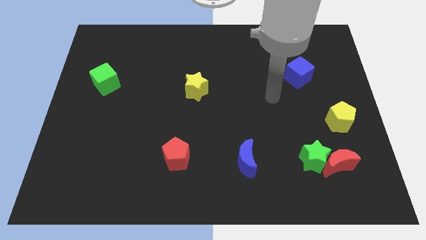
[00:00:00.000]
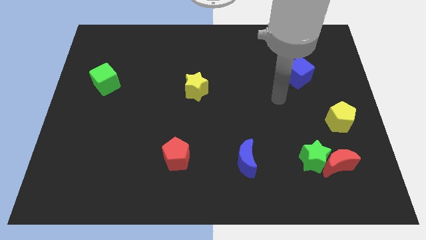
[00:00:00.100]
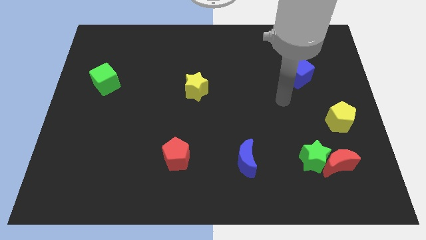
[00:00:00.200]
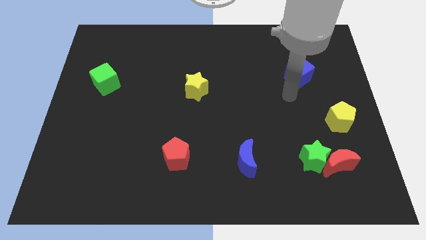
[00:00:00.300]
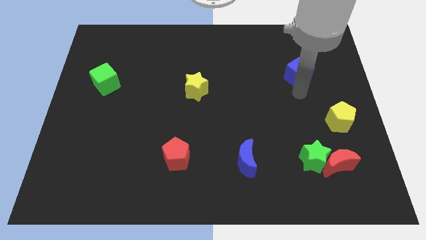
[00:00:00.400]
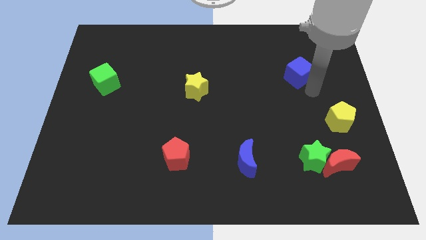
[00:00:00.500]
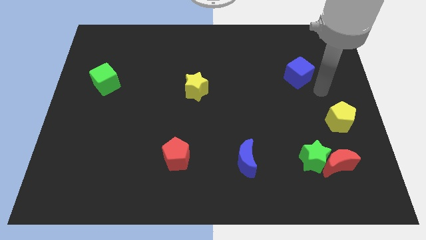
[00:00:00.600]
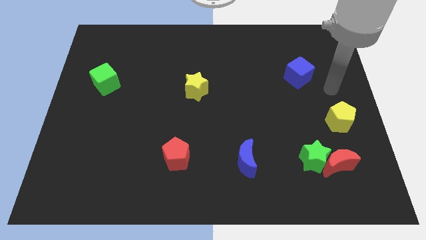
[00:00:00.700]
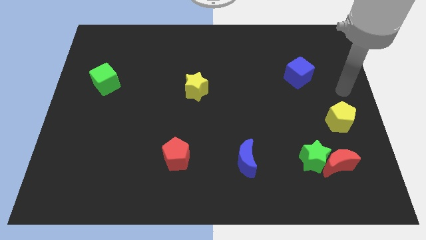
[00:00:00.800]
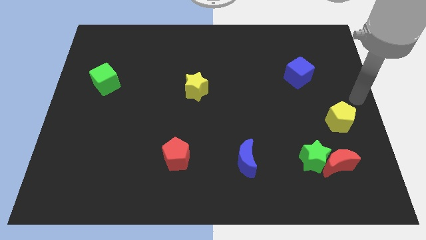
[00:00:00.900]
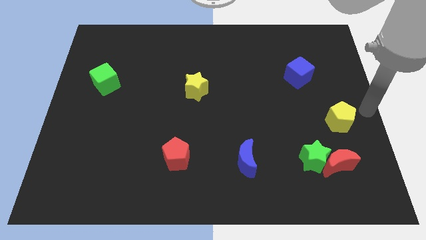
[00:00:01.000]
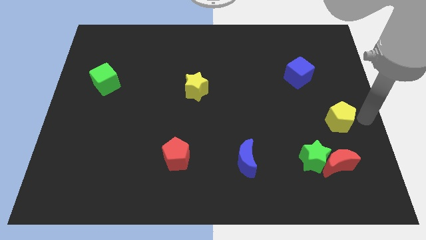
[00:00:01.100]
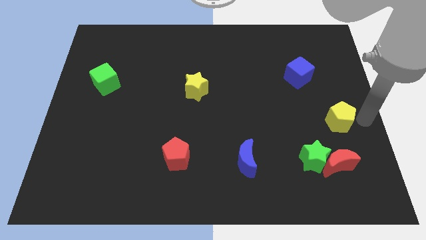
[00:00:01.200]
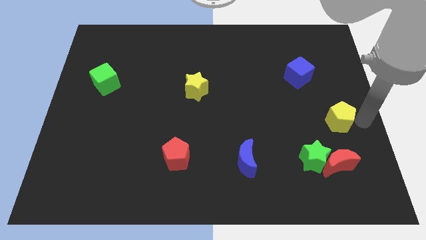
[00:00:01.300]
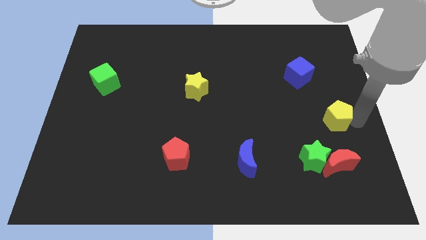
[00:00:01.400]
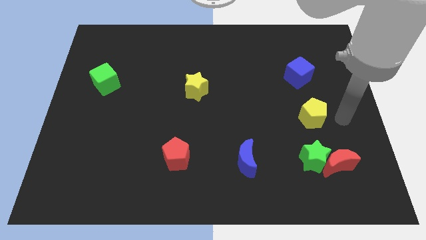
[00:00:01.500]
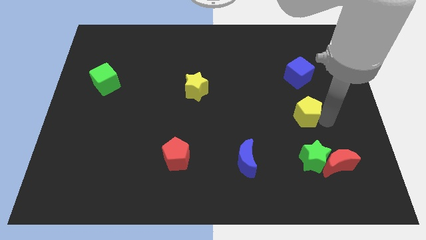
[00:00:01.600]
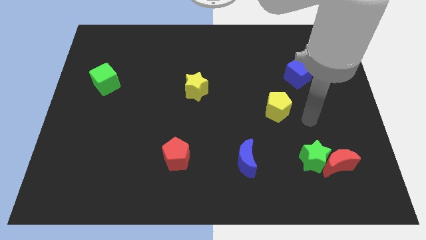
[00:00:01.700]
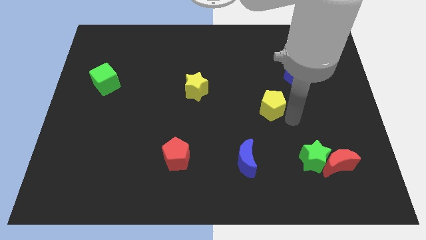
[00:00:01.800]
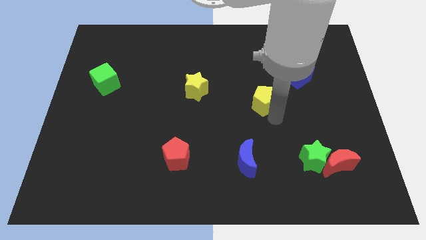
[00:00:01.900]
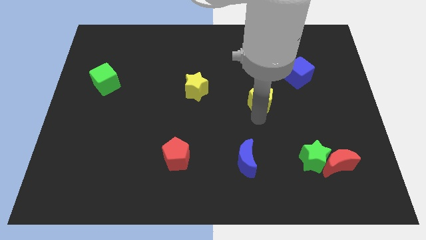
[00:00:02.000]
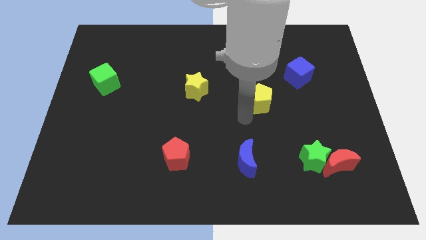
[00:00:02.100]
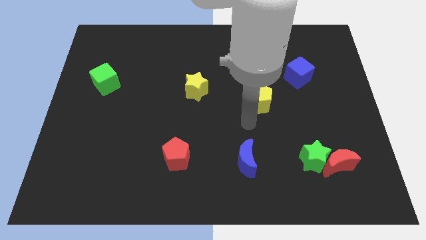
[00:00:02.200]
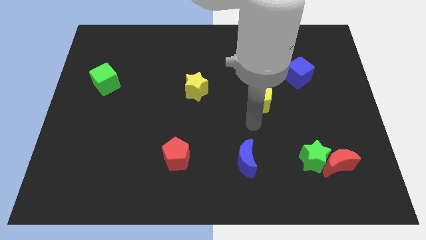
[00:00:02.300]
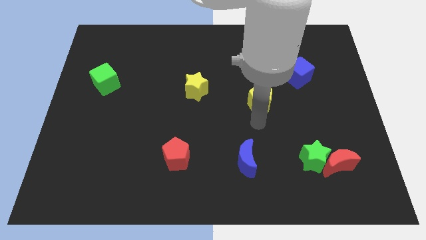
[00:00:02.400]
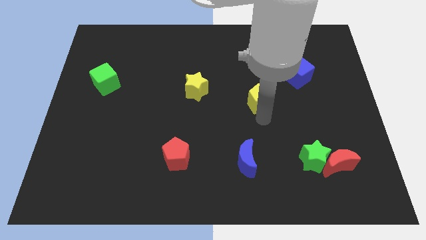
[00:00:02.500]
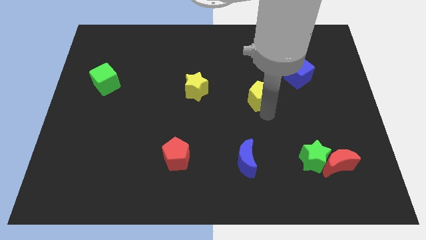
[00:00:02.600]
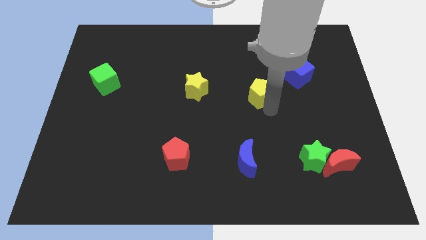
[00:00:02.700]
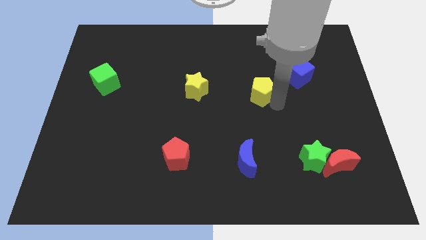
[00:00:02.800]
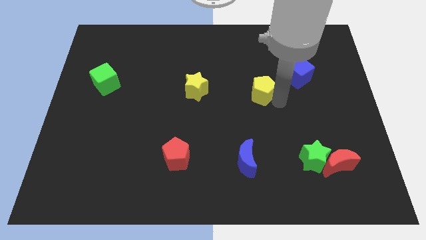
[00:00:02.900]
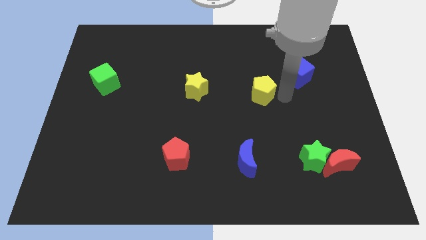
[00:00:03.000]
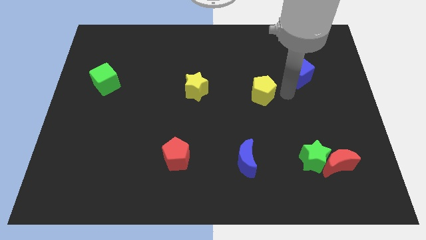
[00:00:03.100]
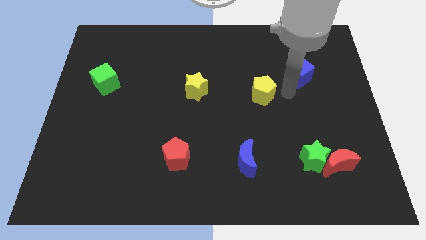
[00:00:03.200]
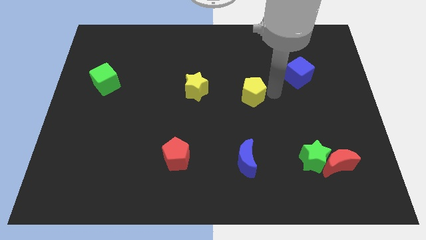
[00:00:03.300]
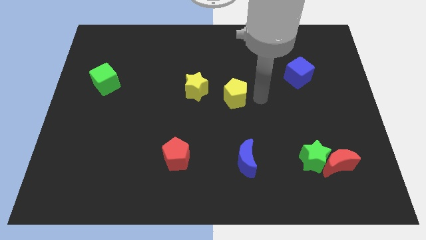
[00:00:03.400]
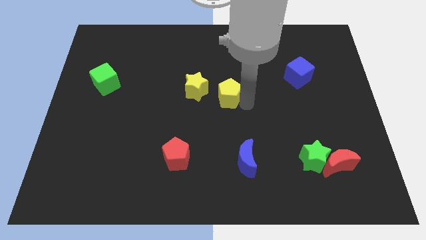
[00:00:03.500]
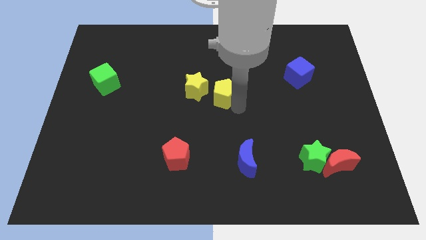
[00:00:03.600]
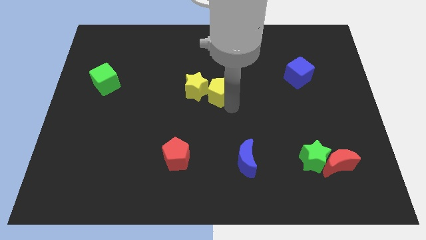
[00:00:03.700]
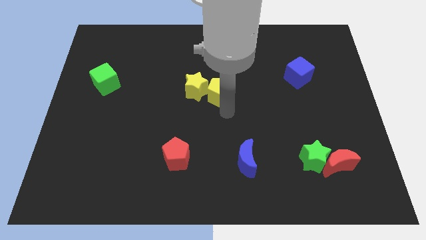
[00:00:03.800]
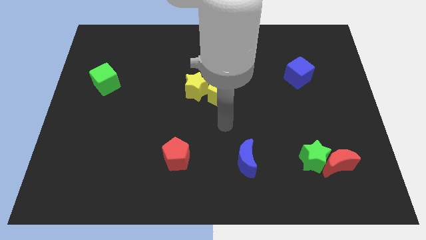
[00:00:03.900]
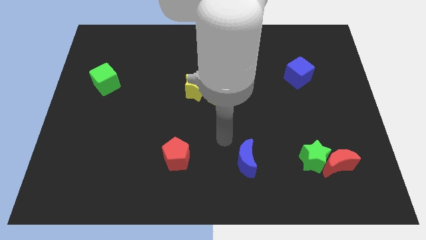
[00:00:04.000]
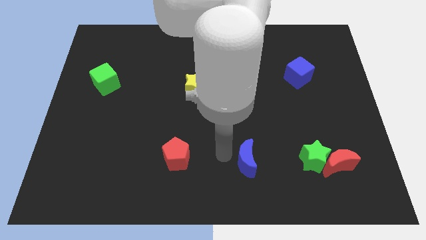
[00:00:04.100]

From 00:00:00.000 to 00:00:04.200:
move the yellow pentagon right to the yellow star

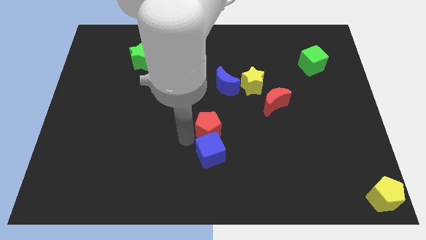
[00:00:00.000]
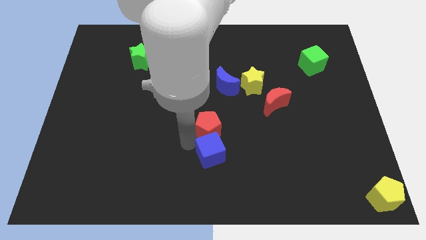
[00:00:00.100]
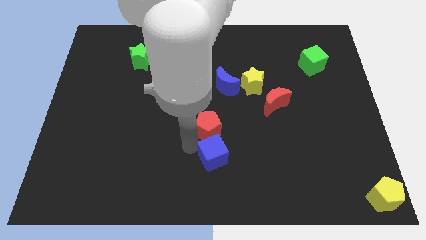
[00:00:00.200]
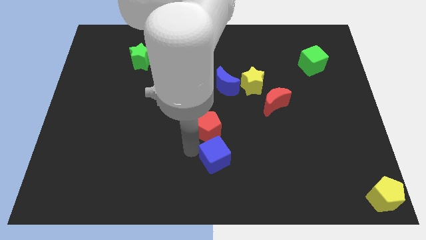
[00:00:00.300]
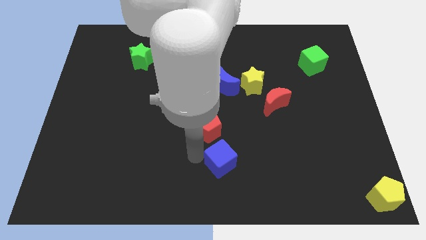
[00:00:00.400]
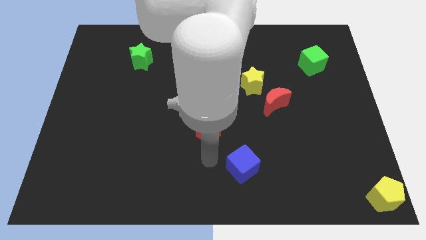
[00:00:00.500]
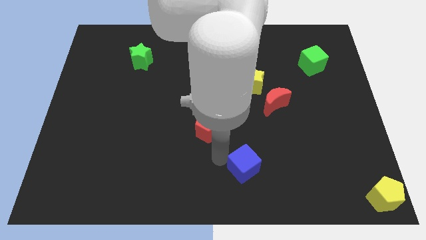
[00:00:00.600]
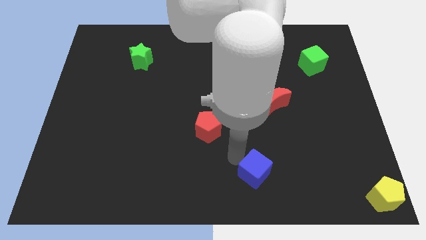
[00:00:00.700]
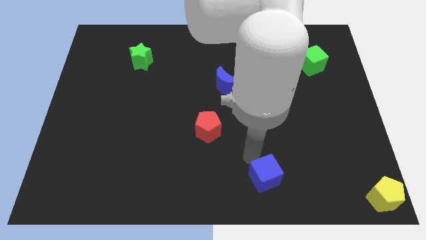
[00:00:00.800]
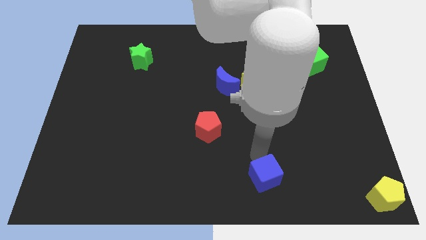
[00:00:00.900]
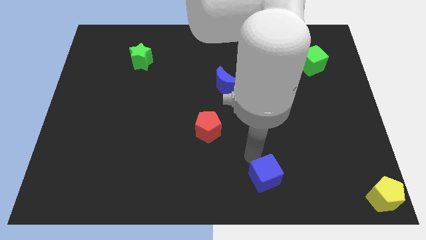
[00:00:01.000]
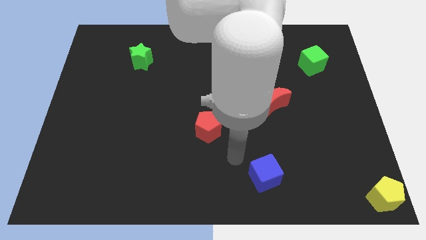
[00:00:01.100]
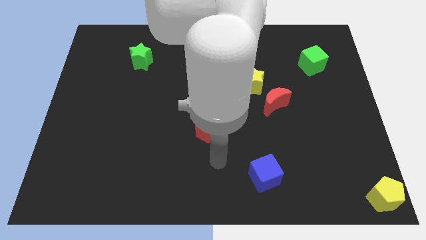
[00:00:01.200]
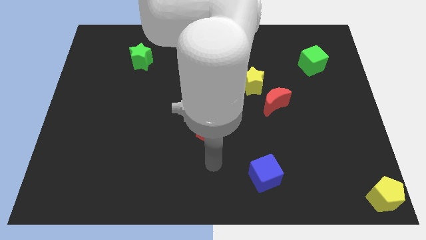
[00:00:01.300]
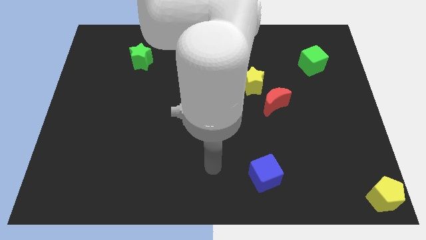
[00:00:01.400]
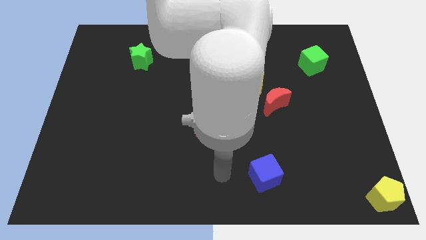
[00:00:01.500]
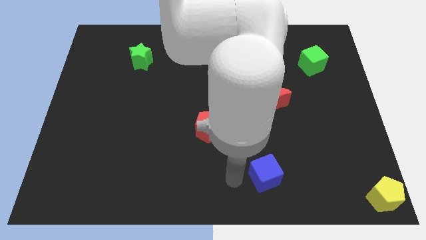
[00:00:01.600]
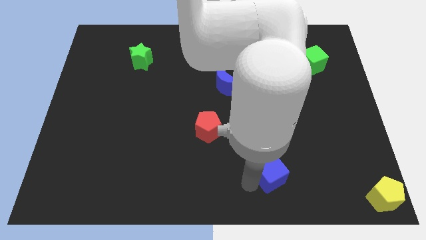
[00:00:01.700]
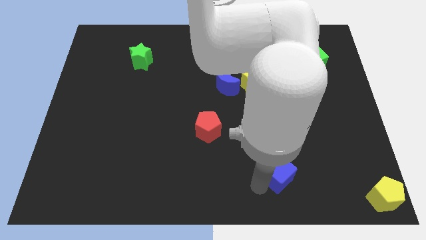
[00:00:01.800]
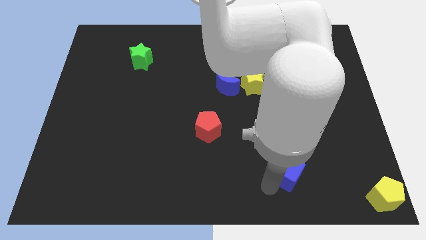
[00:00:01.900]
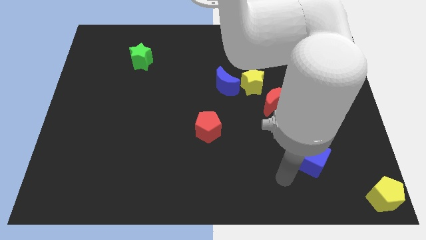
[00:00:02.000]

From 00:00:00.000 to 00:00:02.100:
separate red pentagon and blue cube

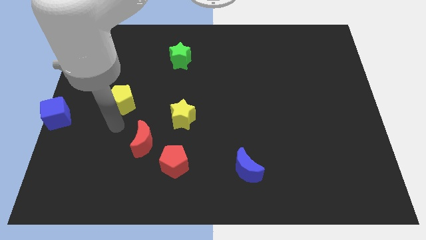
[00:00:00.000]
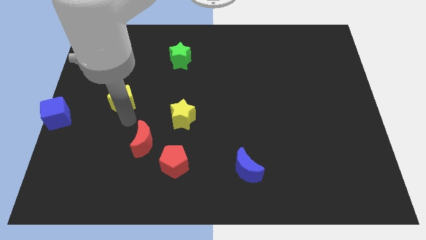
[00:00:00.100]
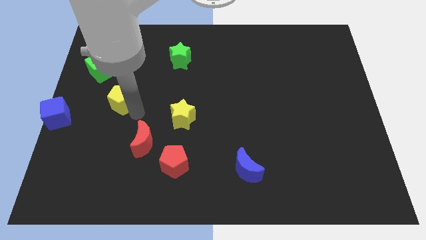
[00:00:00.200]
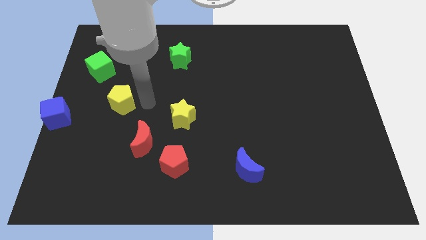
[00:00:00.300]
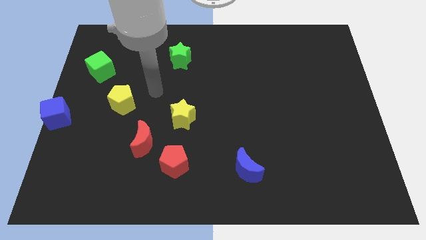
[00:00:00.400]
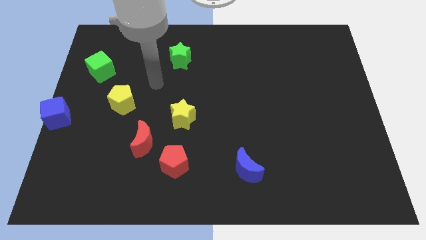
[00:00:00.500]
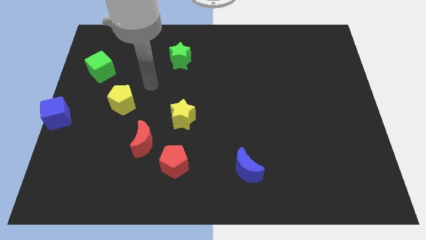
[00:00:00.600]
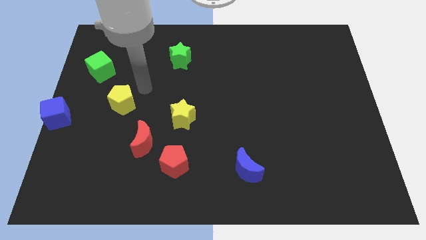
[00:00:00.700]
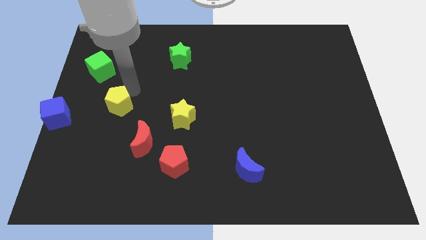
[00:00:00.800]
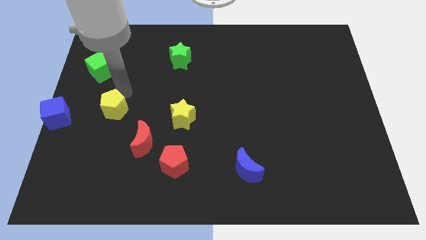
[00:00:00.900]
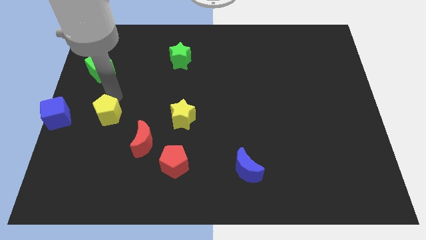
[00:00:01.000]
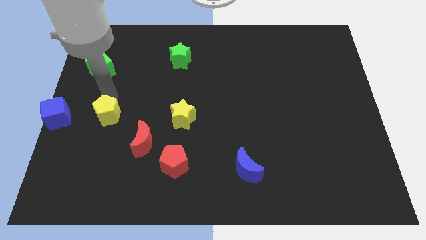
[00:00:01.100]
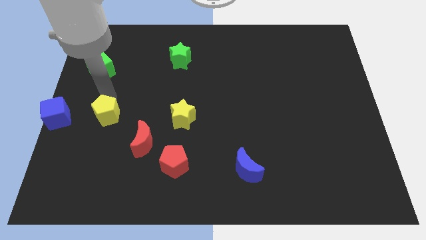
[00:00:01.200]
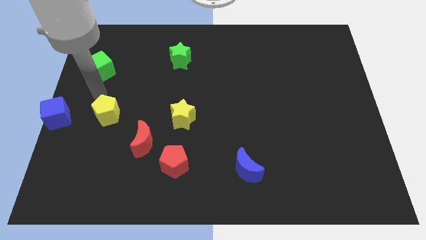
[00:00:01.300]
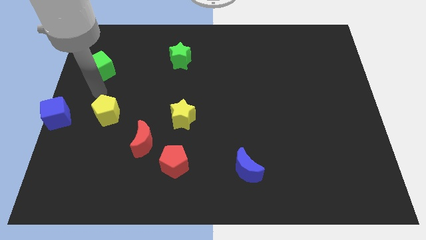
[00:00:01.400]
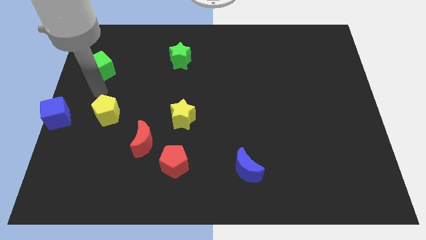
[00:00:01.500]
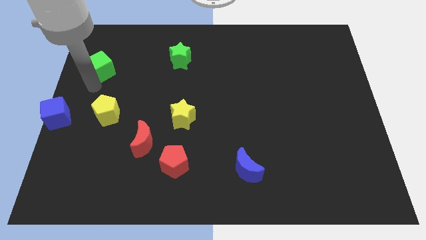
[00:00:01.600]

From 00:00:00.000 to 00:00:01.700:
place the yellow pentagon parallel to blue cube

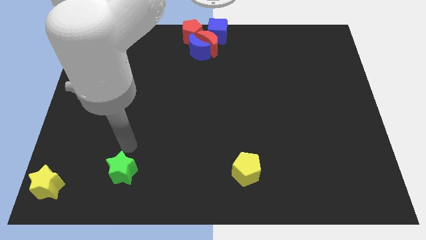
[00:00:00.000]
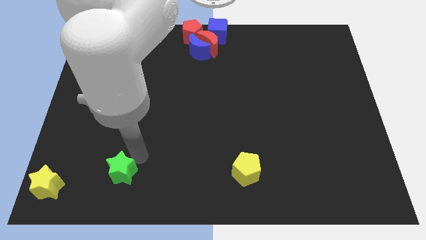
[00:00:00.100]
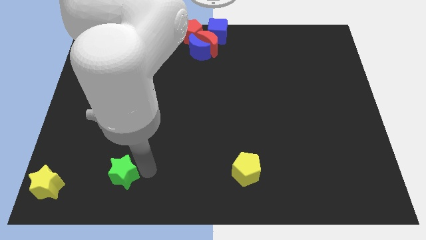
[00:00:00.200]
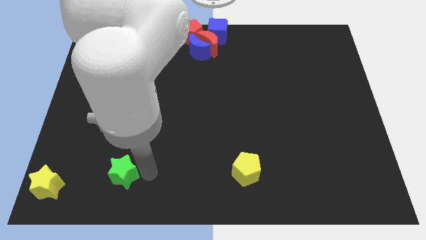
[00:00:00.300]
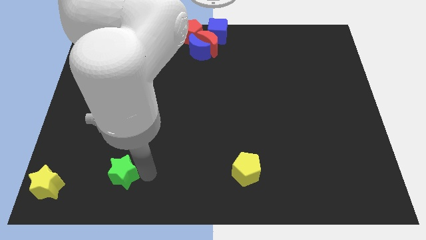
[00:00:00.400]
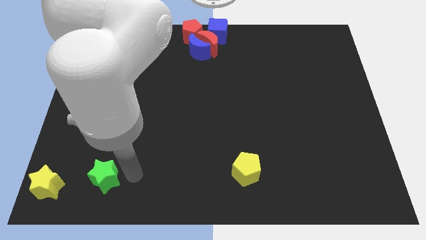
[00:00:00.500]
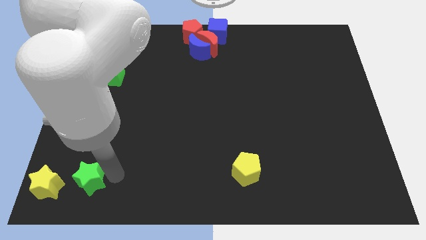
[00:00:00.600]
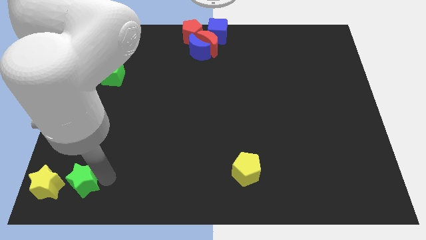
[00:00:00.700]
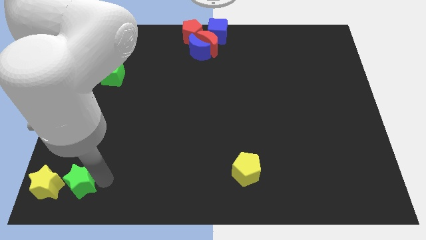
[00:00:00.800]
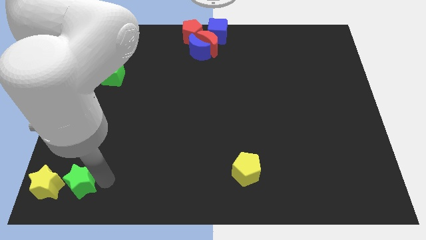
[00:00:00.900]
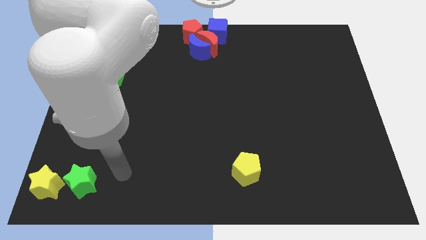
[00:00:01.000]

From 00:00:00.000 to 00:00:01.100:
place the green star right to the yellow star
